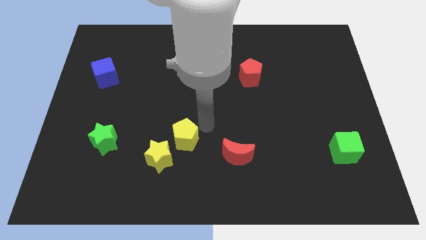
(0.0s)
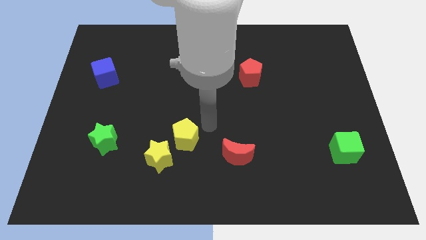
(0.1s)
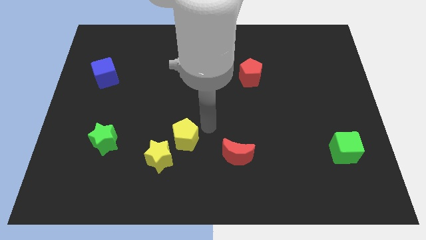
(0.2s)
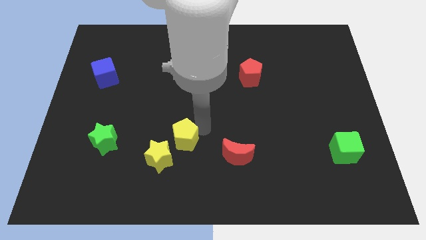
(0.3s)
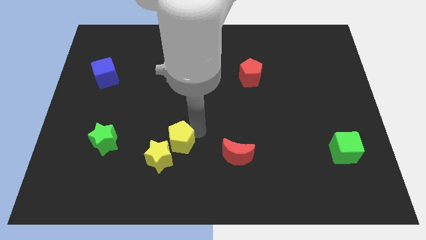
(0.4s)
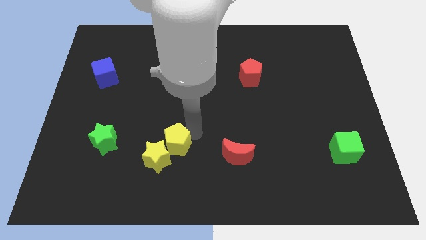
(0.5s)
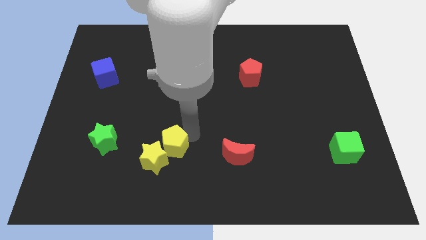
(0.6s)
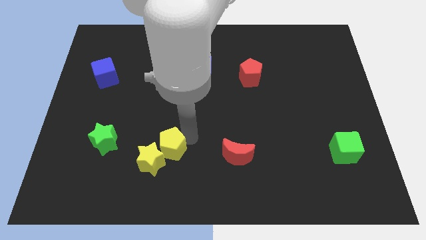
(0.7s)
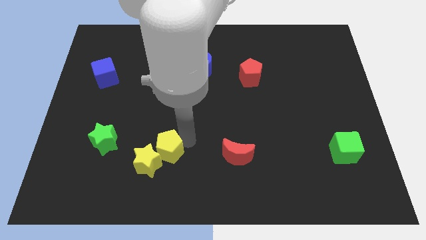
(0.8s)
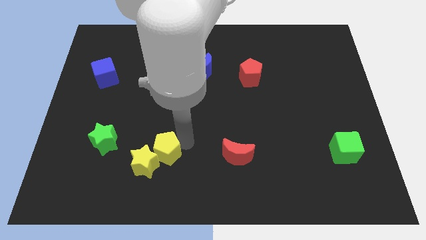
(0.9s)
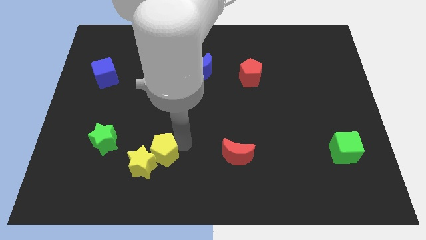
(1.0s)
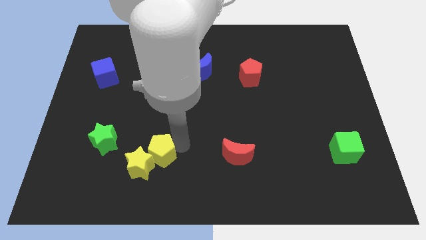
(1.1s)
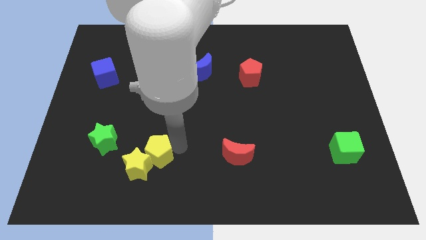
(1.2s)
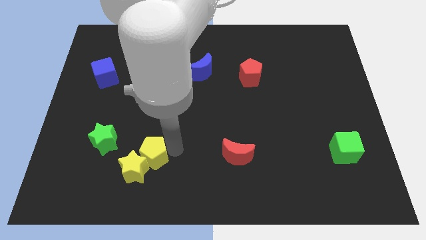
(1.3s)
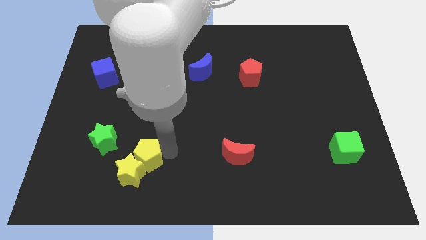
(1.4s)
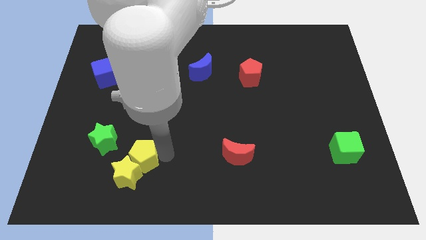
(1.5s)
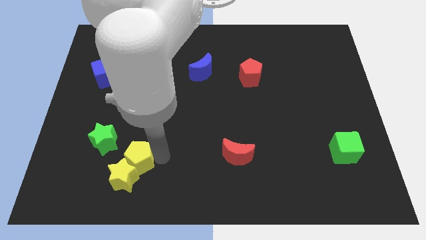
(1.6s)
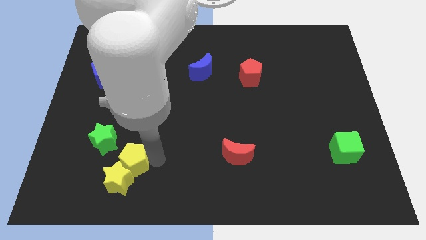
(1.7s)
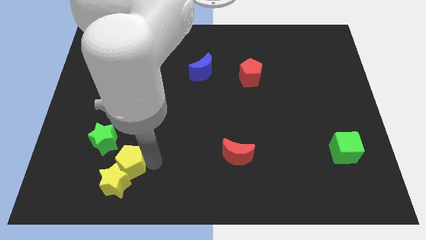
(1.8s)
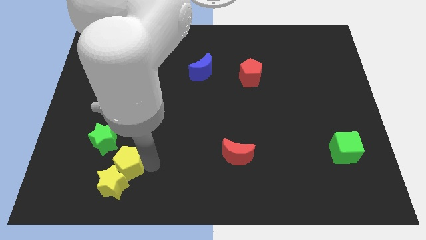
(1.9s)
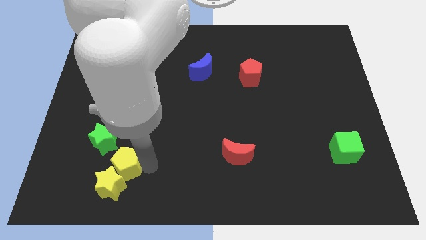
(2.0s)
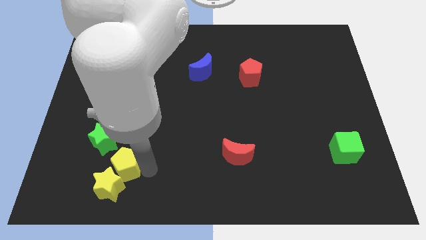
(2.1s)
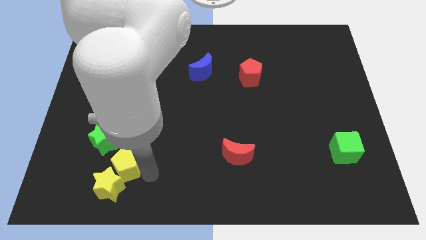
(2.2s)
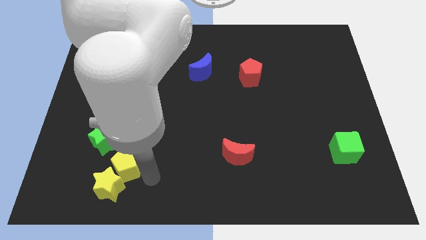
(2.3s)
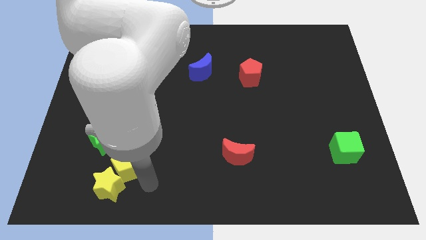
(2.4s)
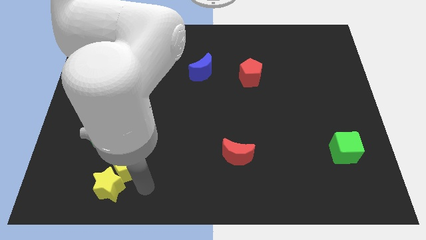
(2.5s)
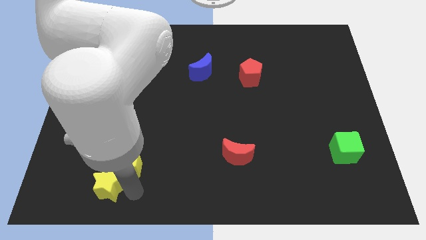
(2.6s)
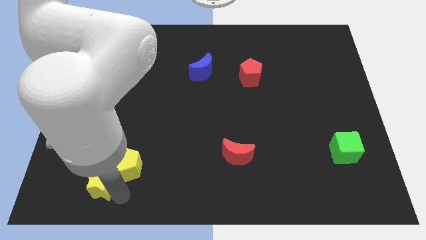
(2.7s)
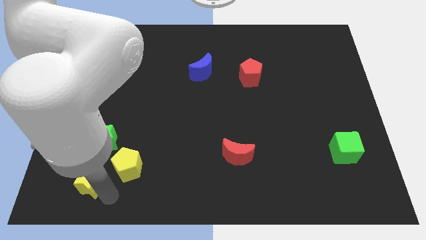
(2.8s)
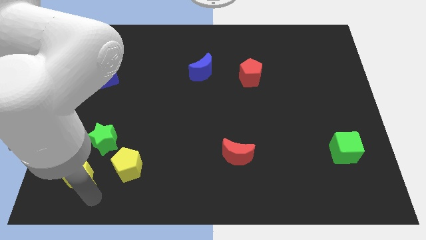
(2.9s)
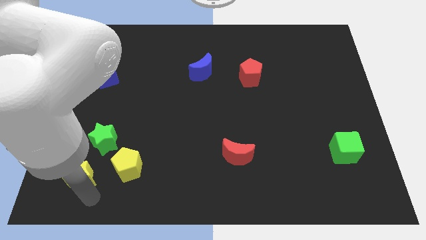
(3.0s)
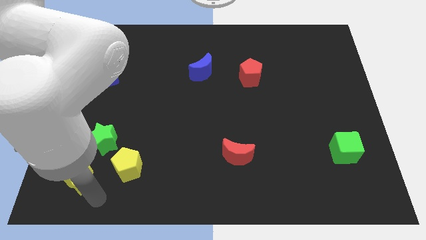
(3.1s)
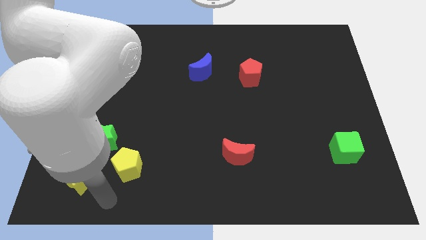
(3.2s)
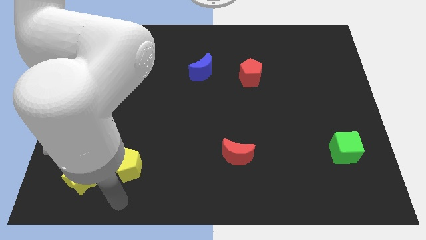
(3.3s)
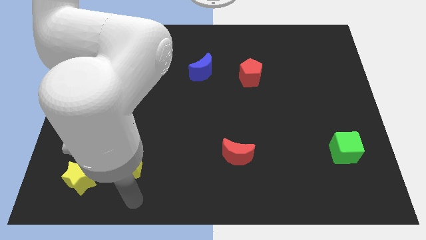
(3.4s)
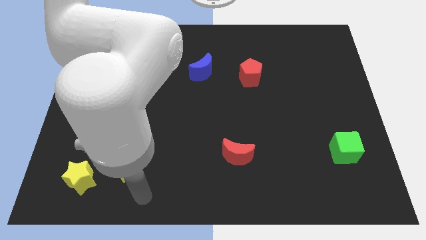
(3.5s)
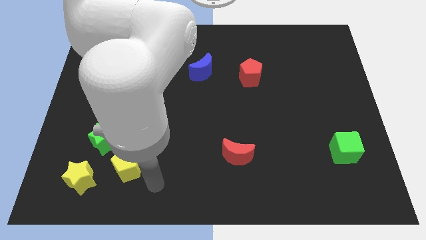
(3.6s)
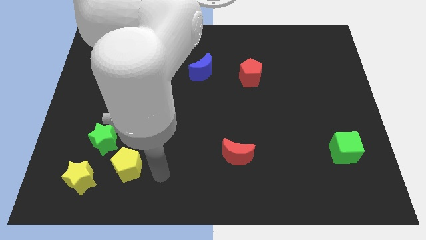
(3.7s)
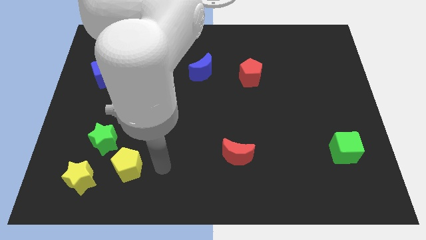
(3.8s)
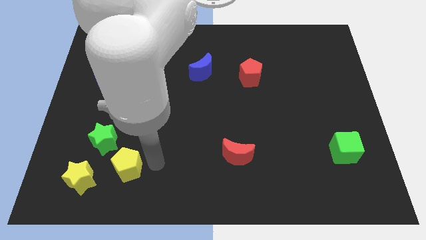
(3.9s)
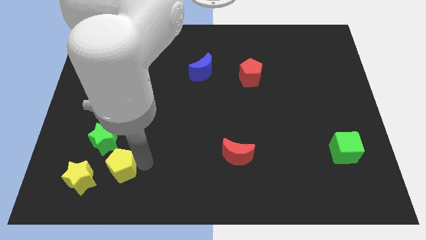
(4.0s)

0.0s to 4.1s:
move yellow blocks diagonally bottom left to red moon

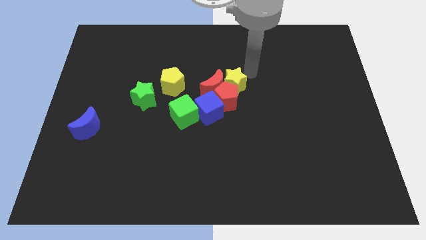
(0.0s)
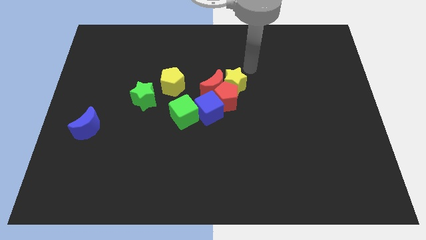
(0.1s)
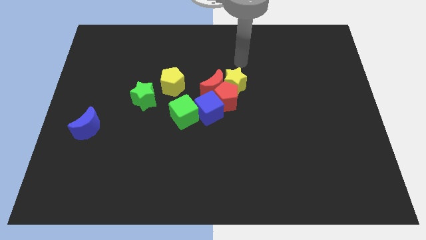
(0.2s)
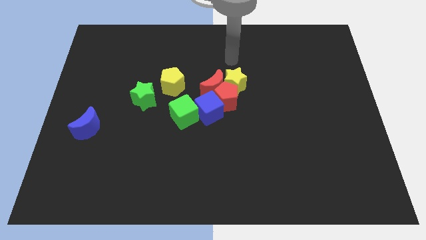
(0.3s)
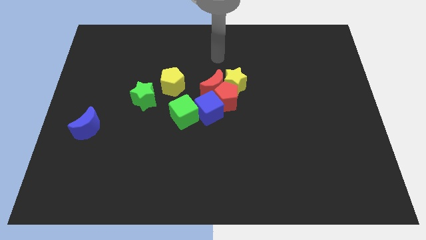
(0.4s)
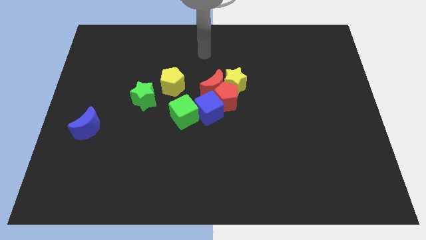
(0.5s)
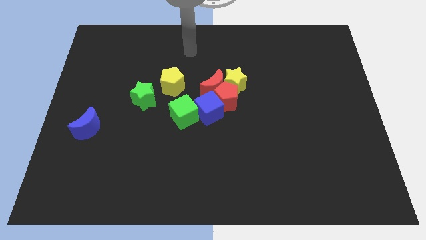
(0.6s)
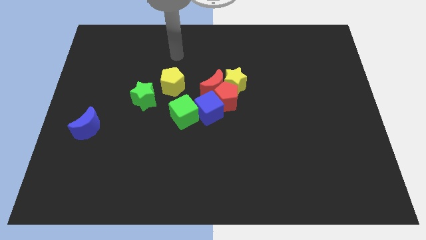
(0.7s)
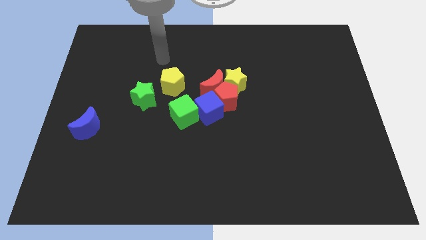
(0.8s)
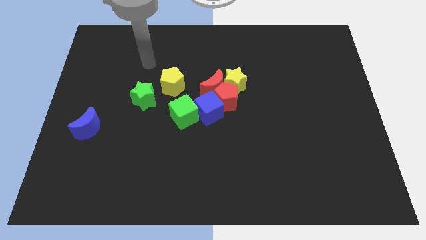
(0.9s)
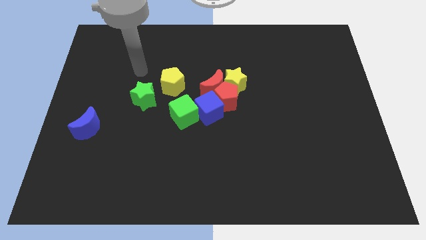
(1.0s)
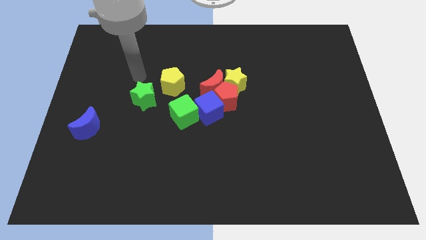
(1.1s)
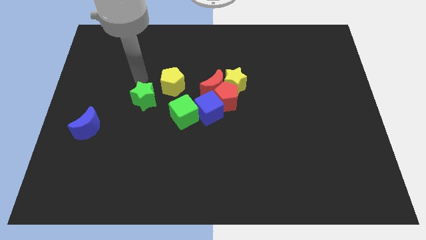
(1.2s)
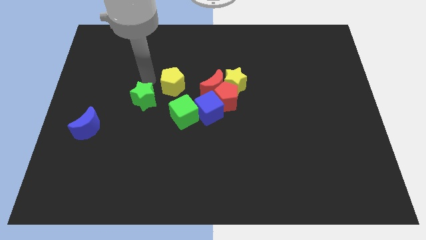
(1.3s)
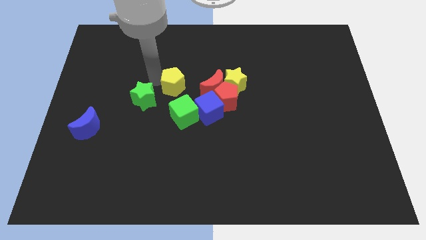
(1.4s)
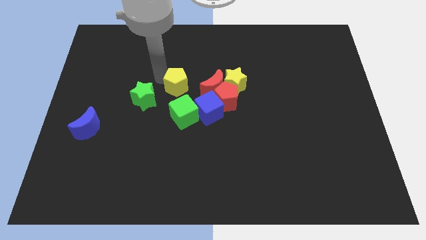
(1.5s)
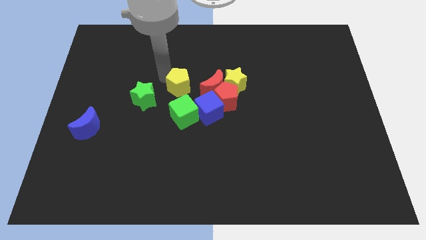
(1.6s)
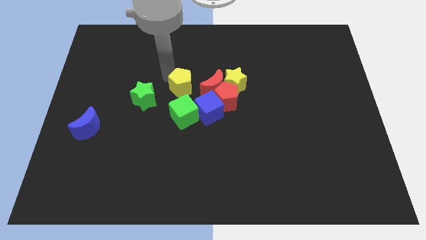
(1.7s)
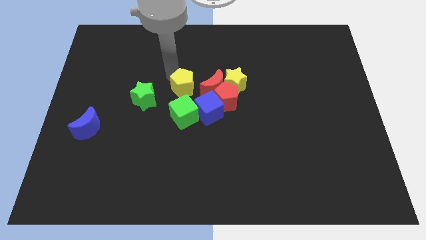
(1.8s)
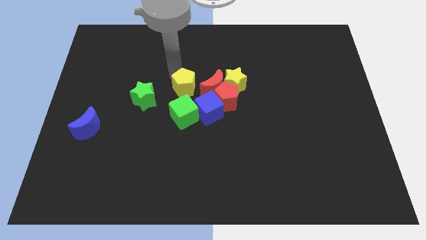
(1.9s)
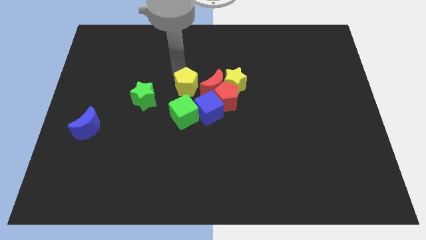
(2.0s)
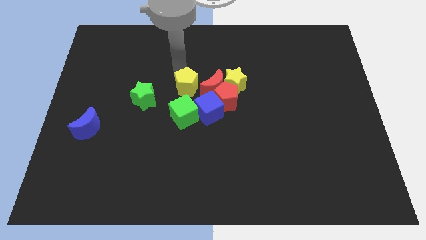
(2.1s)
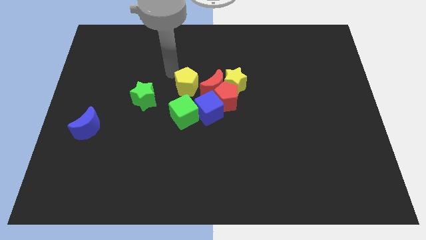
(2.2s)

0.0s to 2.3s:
move the yellow pentagon close to red crescent

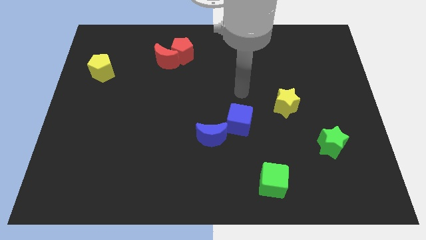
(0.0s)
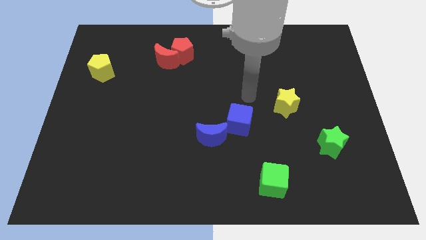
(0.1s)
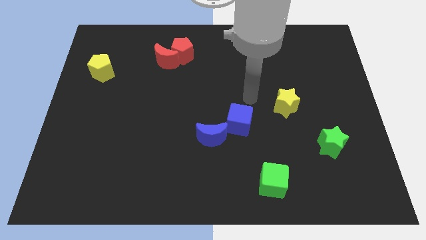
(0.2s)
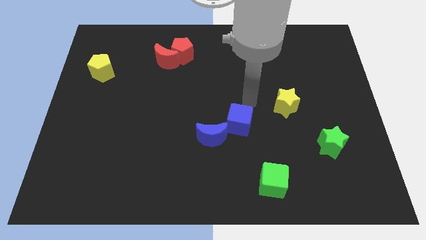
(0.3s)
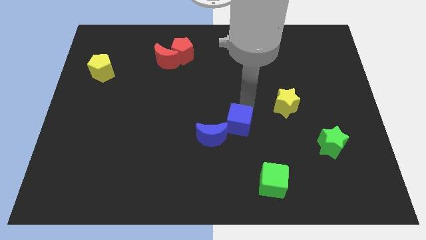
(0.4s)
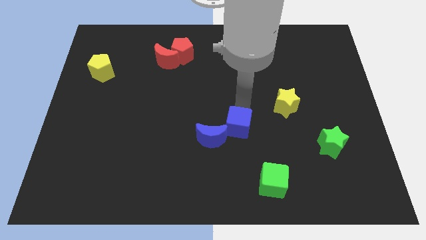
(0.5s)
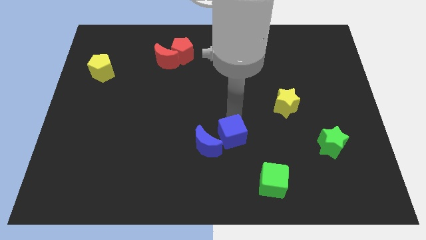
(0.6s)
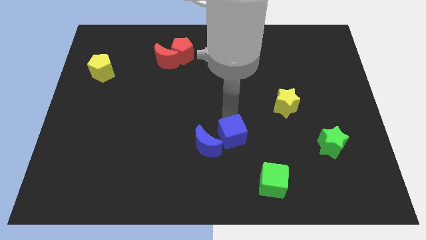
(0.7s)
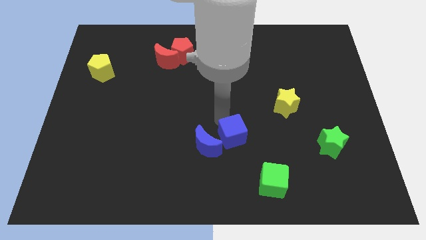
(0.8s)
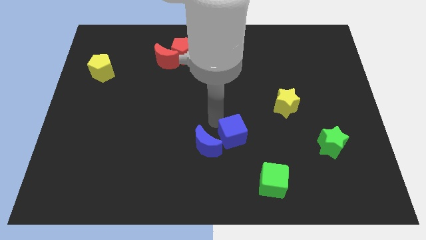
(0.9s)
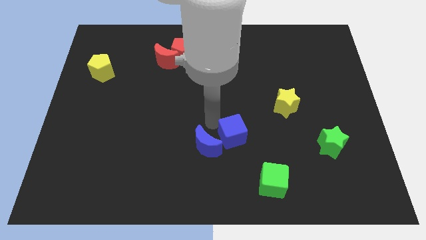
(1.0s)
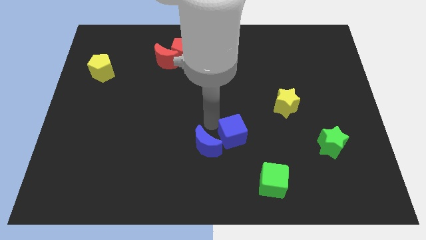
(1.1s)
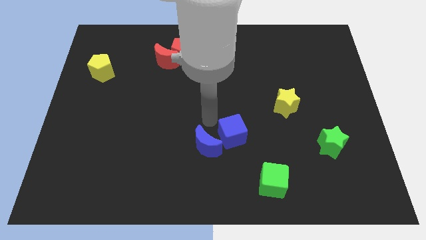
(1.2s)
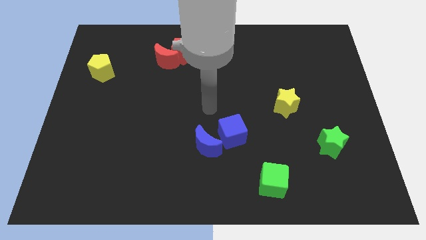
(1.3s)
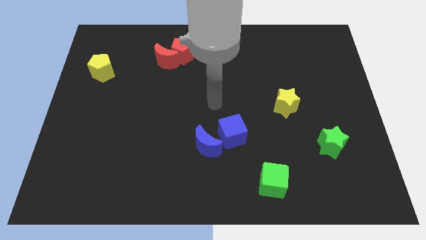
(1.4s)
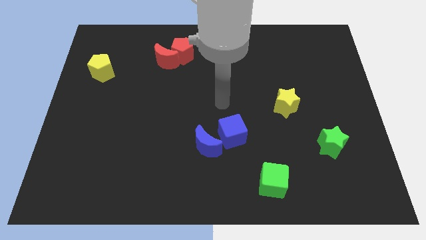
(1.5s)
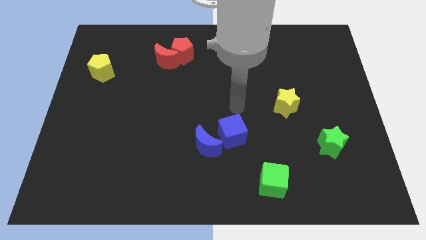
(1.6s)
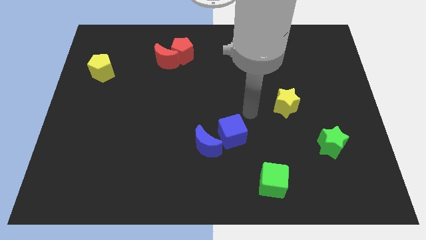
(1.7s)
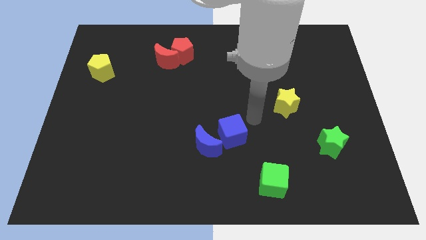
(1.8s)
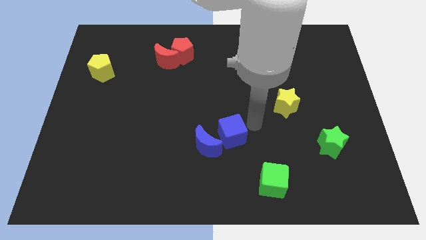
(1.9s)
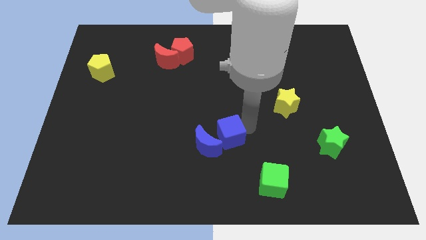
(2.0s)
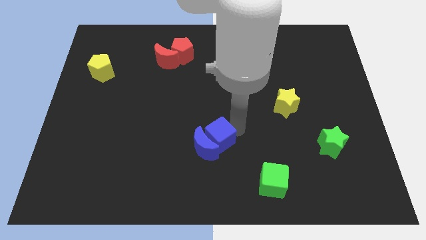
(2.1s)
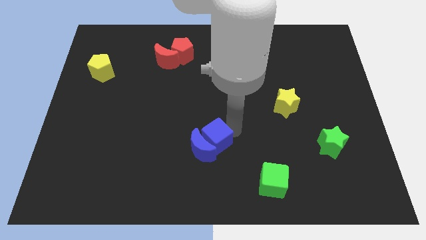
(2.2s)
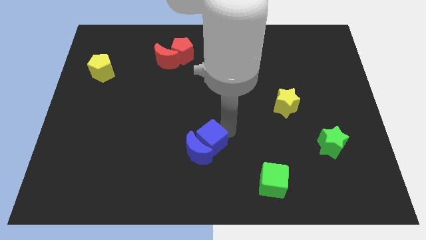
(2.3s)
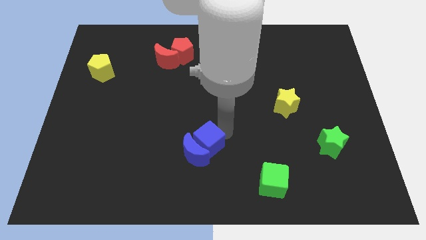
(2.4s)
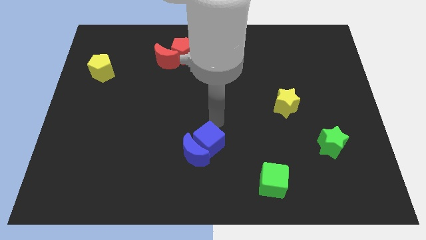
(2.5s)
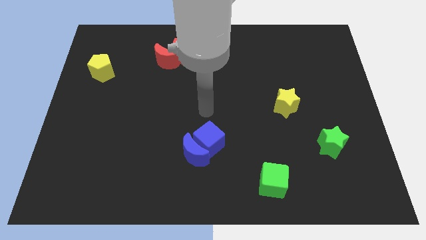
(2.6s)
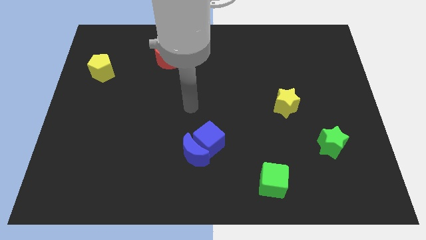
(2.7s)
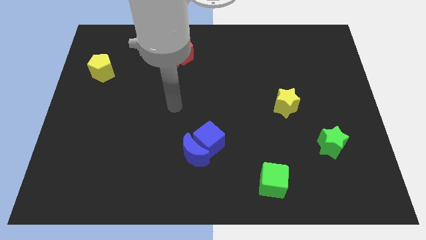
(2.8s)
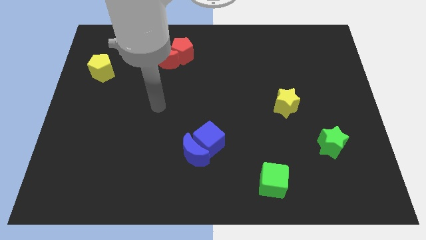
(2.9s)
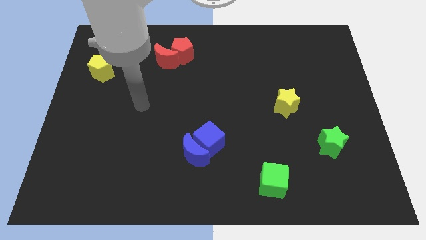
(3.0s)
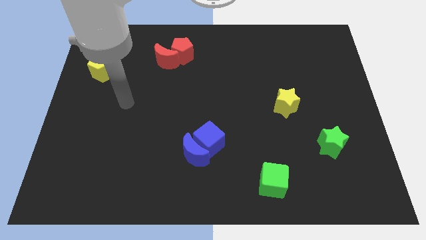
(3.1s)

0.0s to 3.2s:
push blue cube into the blue crescent
